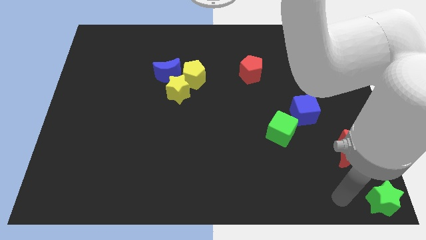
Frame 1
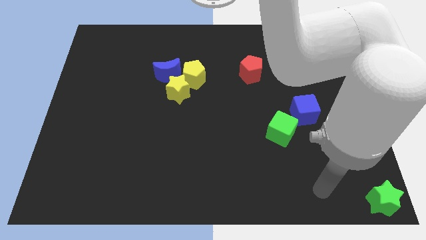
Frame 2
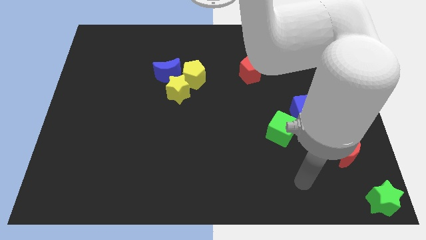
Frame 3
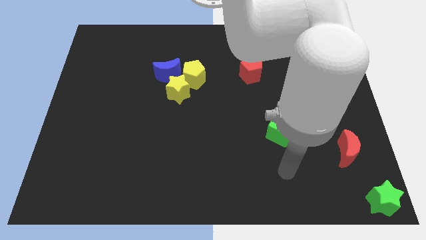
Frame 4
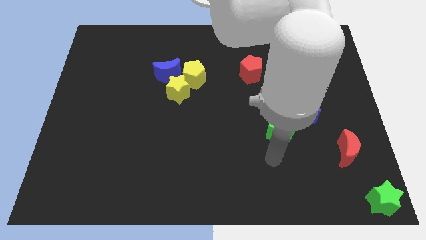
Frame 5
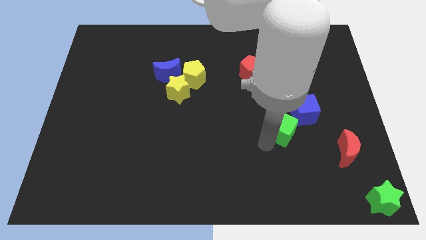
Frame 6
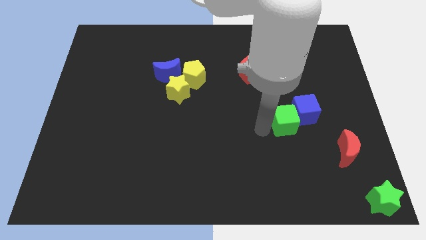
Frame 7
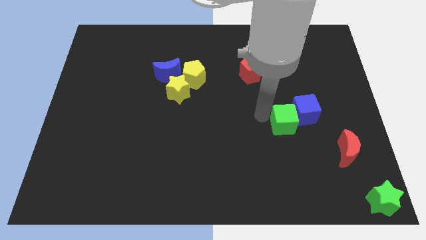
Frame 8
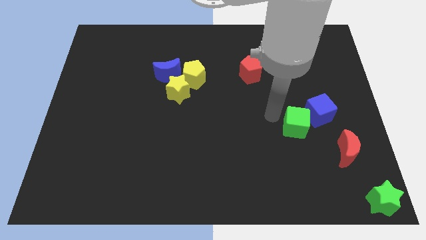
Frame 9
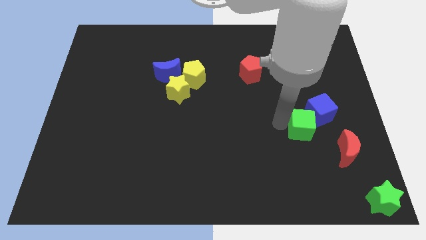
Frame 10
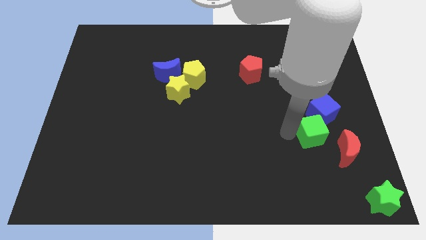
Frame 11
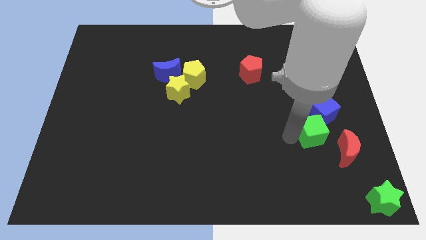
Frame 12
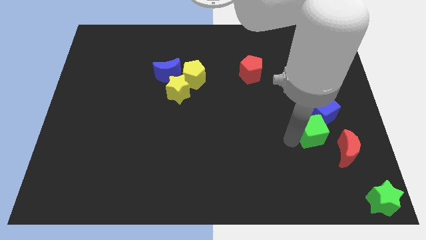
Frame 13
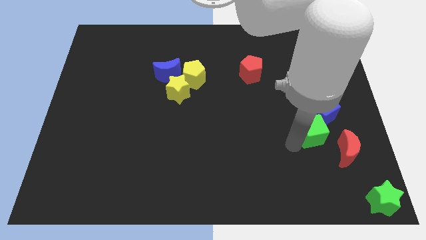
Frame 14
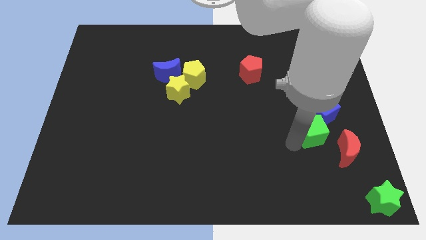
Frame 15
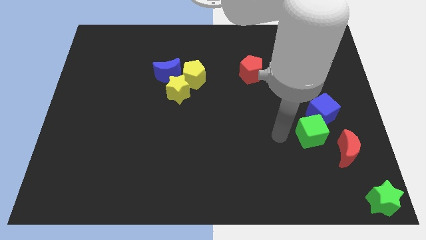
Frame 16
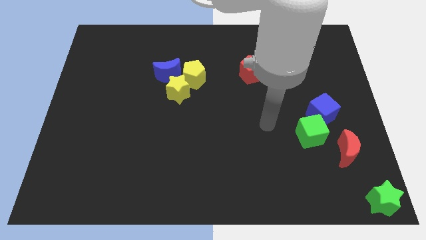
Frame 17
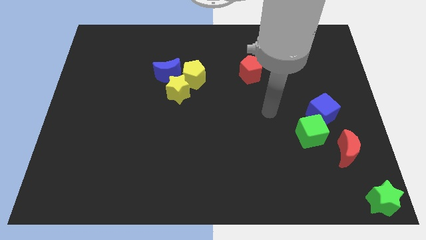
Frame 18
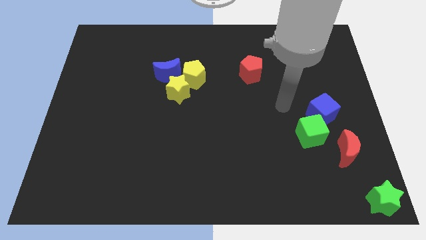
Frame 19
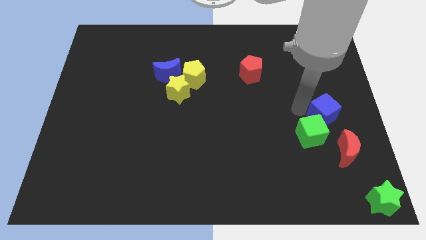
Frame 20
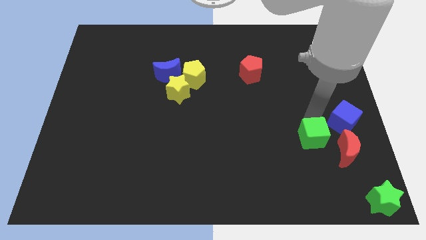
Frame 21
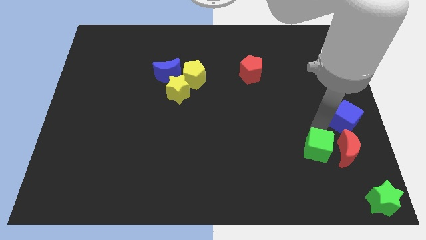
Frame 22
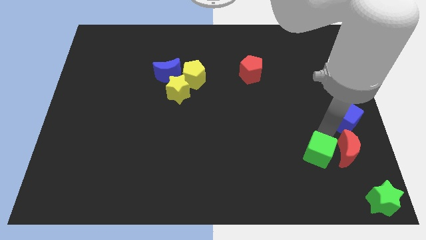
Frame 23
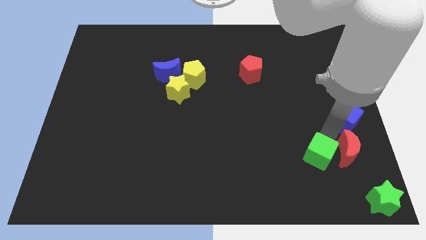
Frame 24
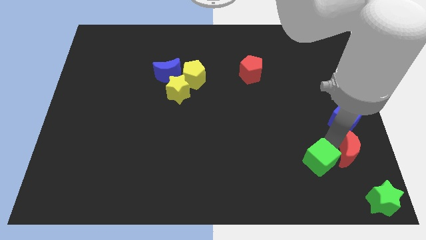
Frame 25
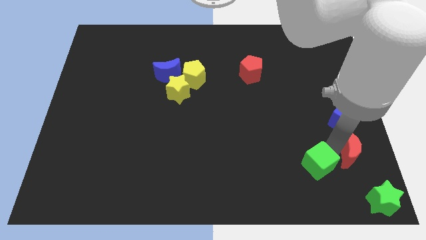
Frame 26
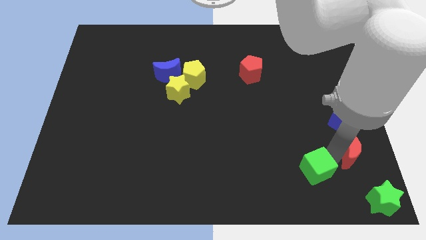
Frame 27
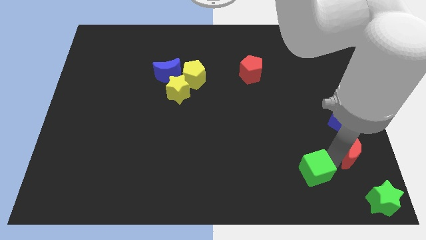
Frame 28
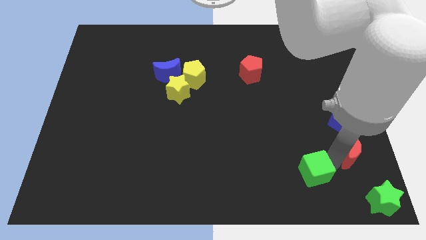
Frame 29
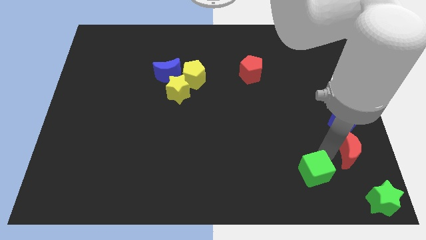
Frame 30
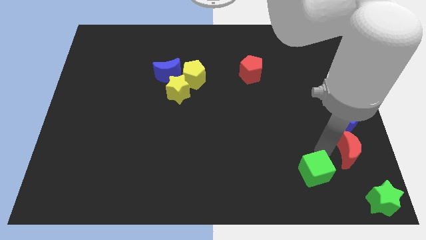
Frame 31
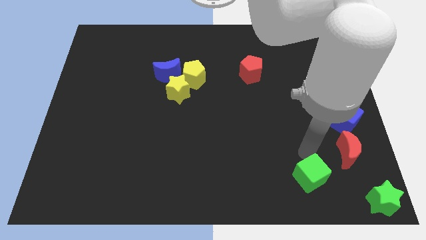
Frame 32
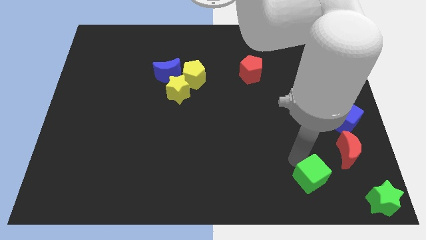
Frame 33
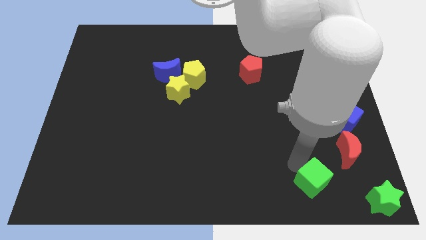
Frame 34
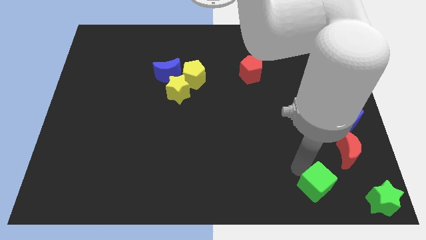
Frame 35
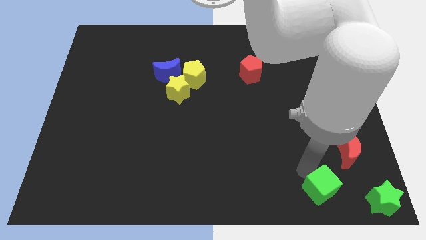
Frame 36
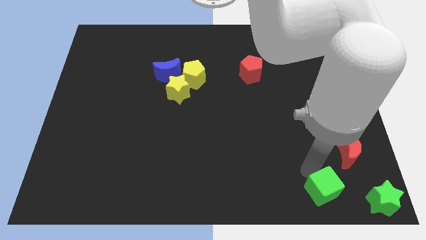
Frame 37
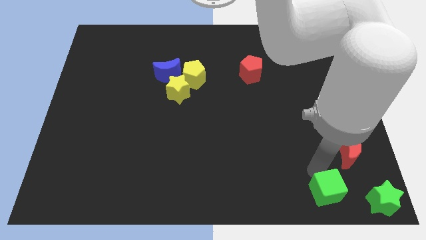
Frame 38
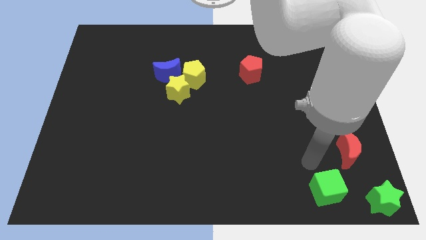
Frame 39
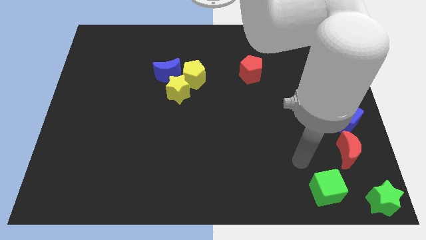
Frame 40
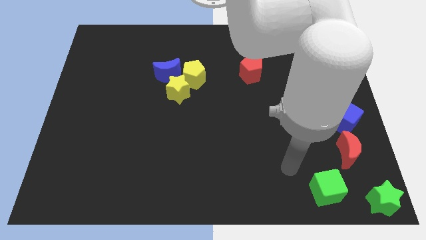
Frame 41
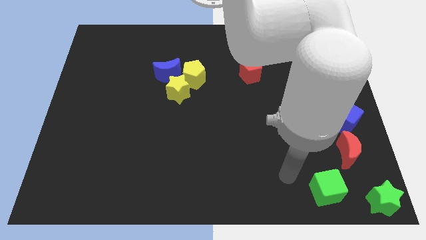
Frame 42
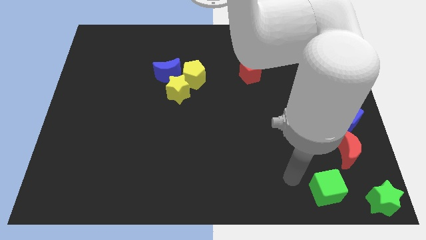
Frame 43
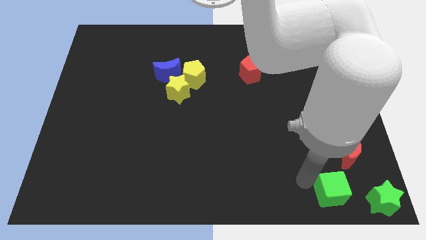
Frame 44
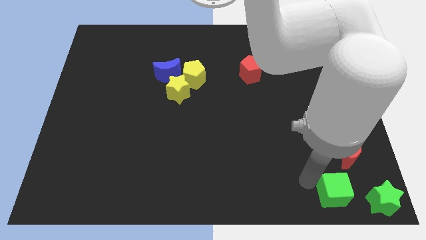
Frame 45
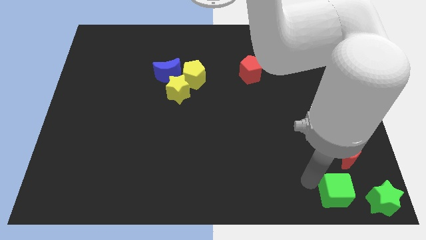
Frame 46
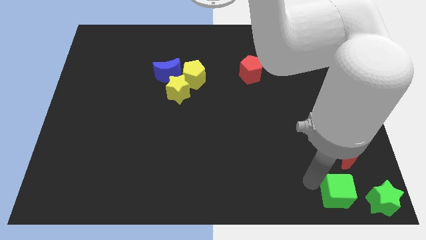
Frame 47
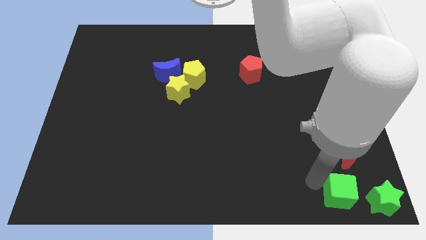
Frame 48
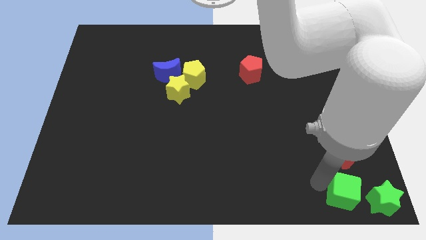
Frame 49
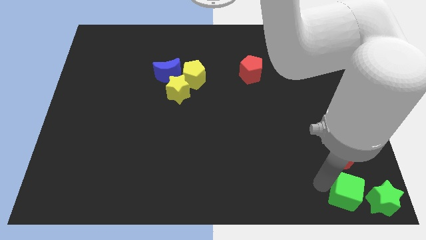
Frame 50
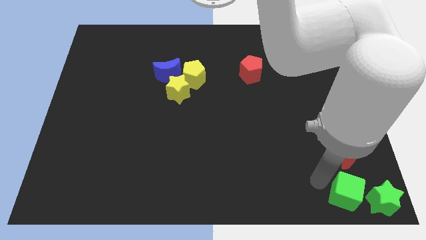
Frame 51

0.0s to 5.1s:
place the green cube to the left of the green star

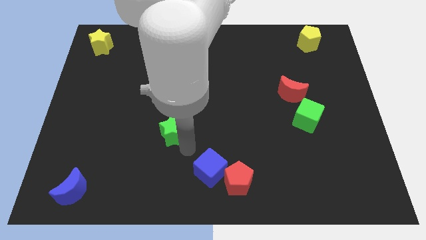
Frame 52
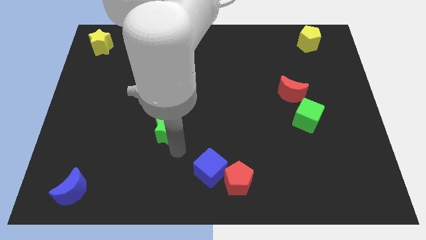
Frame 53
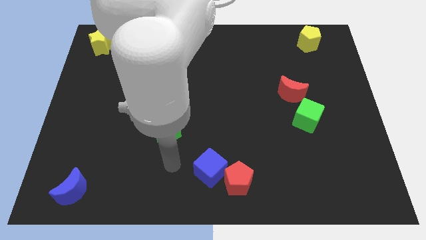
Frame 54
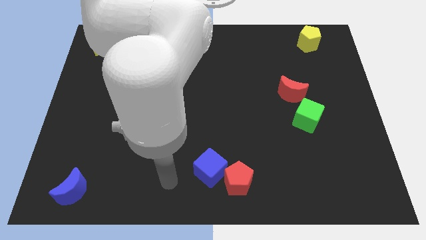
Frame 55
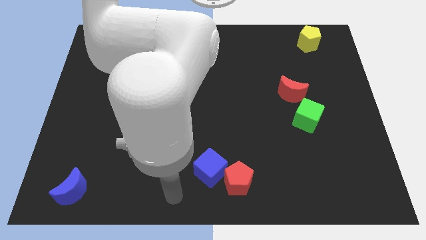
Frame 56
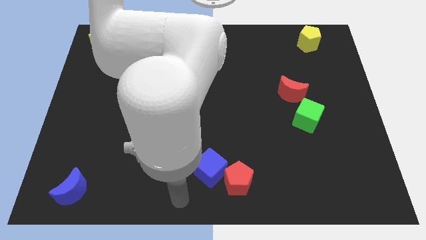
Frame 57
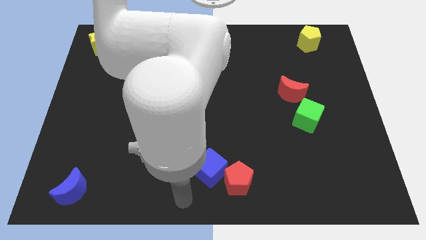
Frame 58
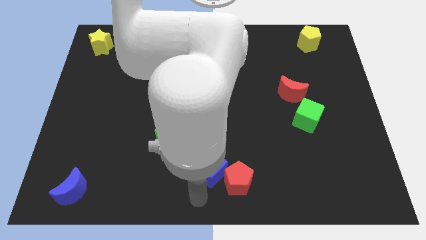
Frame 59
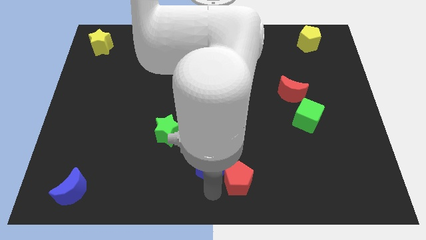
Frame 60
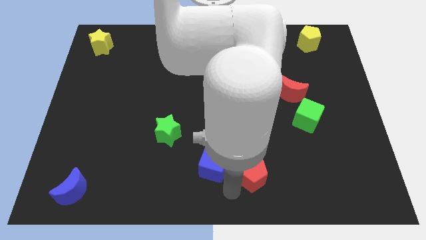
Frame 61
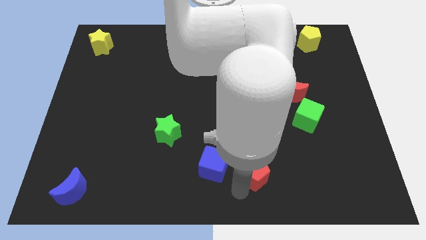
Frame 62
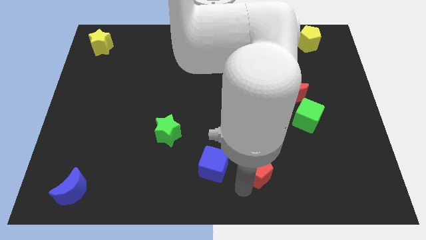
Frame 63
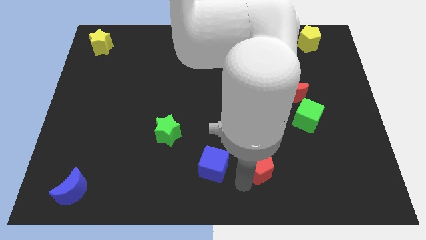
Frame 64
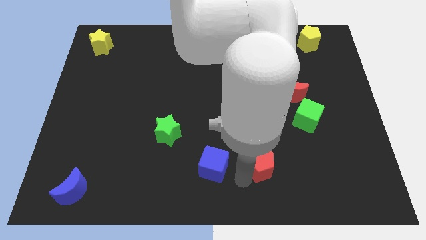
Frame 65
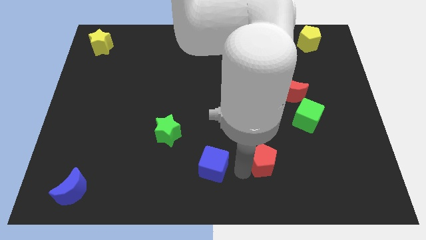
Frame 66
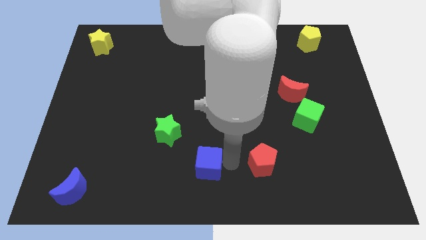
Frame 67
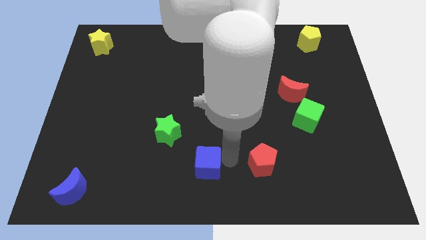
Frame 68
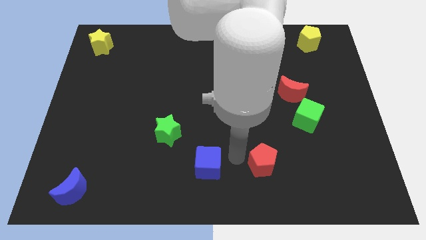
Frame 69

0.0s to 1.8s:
separate the red pentagon from the blue cube at the bottom center of the board

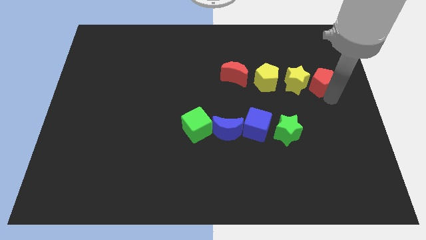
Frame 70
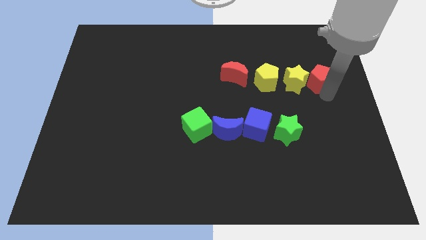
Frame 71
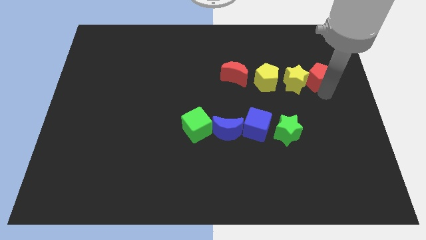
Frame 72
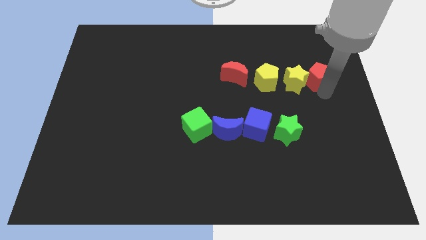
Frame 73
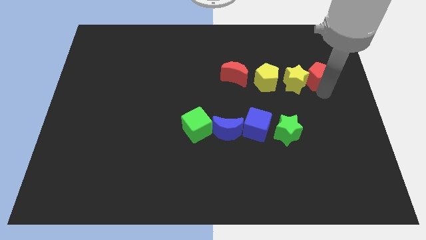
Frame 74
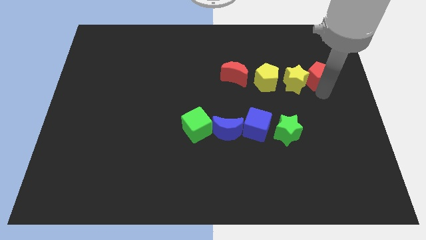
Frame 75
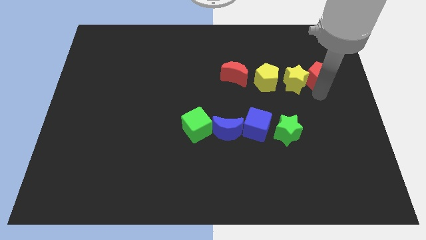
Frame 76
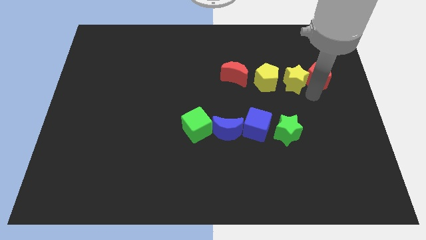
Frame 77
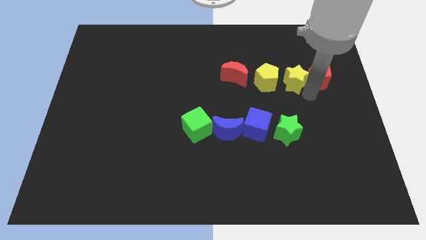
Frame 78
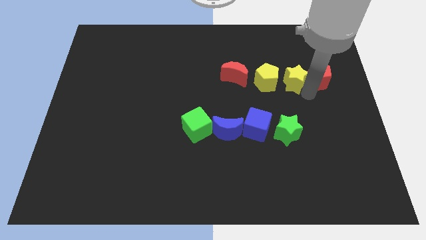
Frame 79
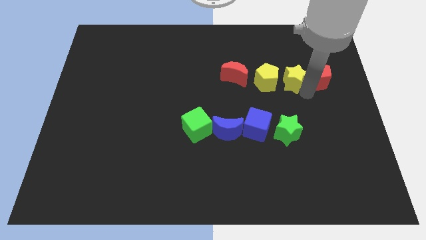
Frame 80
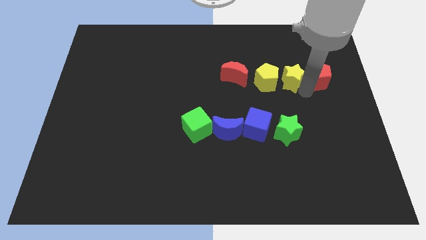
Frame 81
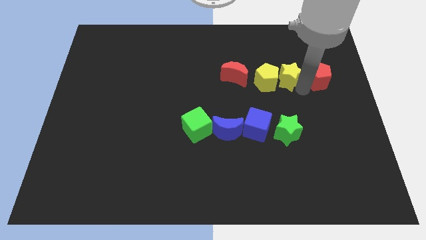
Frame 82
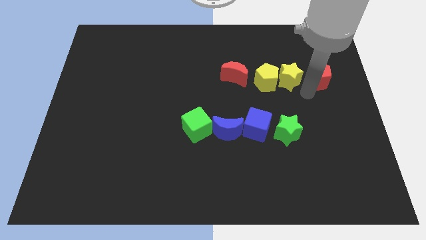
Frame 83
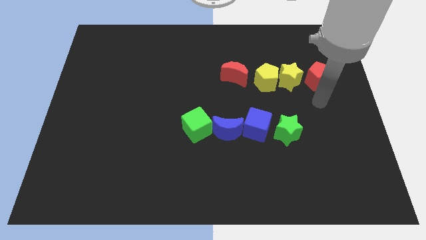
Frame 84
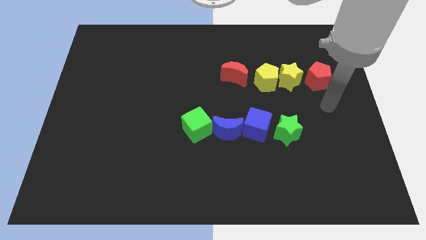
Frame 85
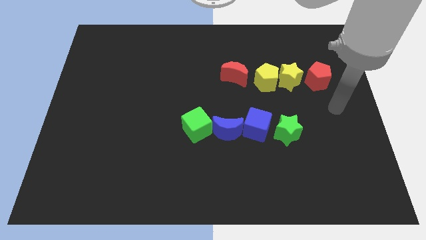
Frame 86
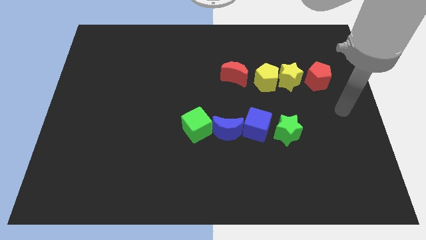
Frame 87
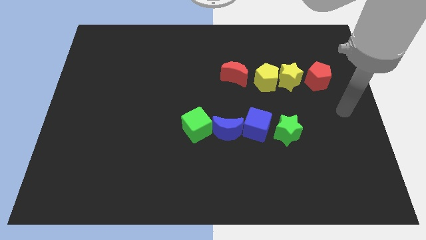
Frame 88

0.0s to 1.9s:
arrange the red pentagonyellow staryellow pentagon and red moon in a horizontal line
